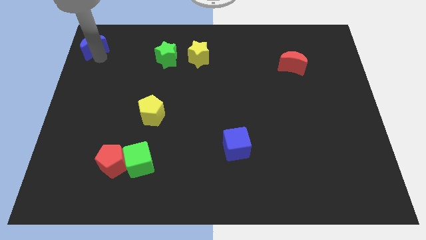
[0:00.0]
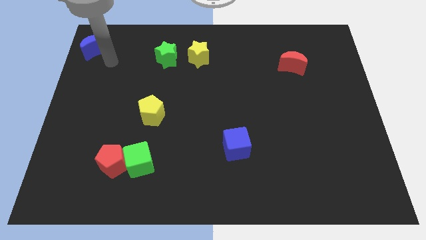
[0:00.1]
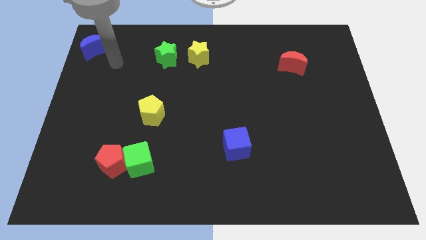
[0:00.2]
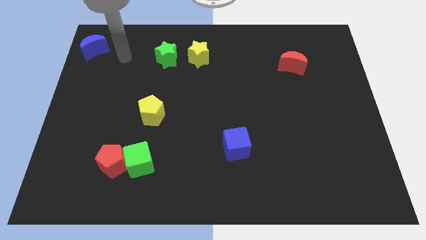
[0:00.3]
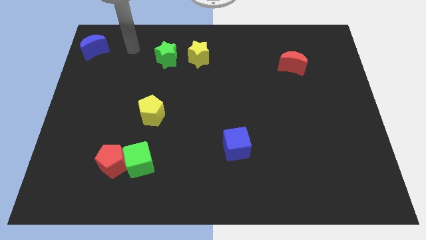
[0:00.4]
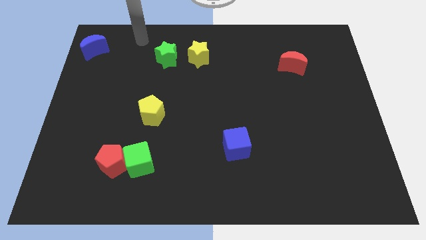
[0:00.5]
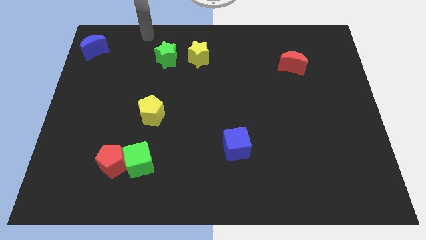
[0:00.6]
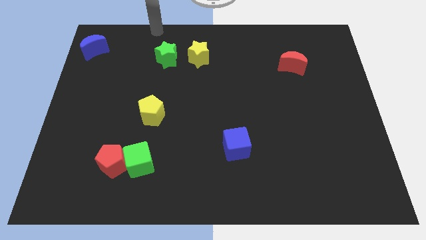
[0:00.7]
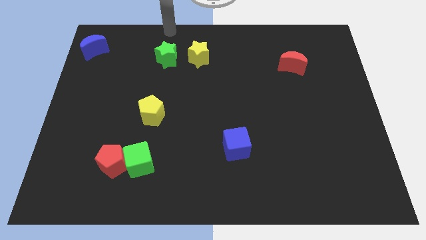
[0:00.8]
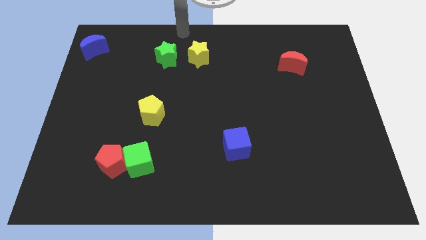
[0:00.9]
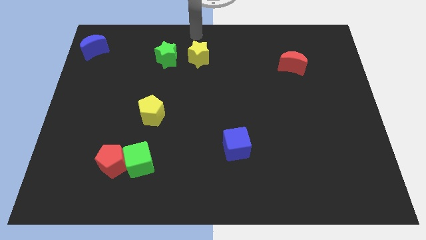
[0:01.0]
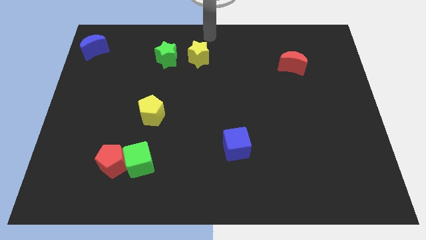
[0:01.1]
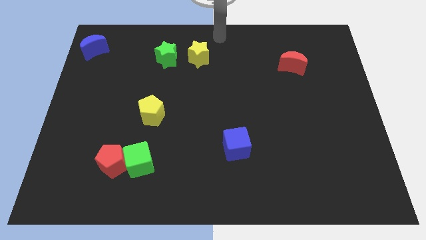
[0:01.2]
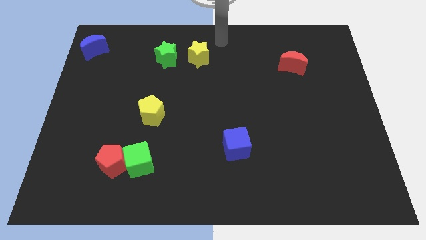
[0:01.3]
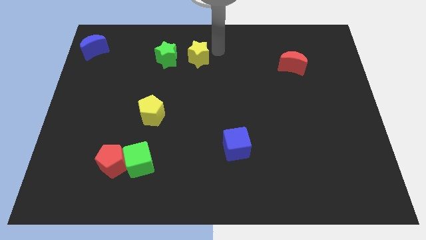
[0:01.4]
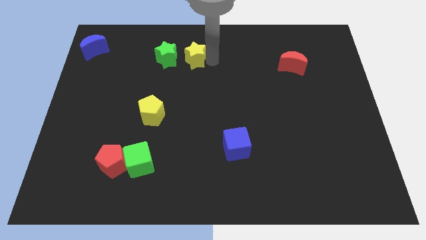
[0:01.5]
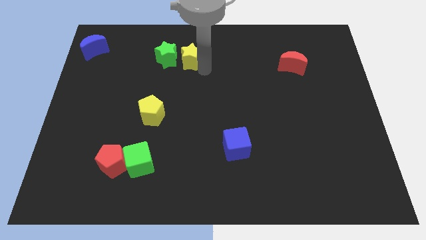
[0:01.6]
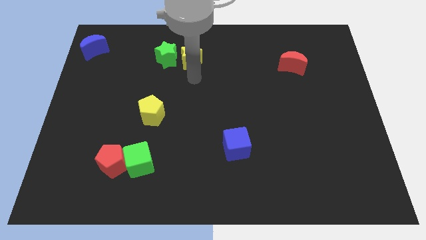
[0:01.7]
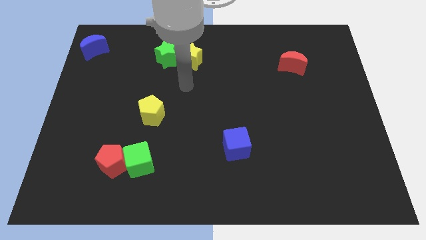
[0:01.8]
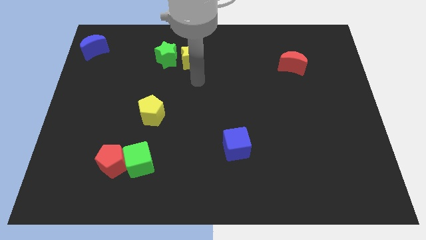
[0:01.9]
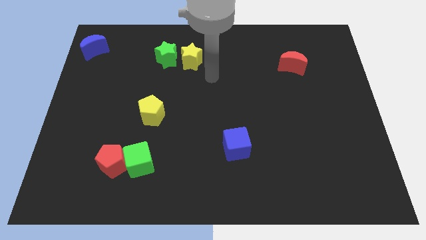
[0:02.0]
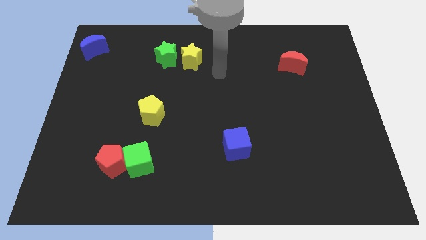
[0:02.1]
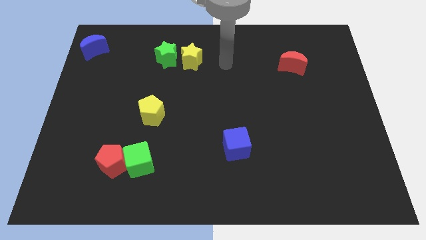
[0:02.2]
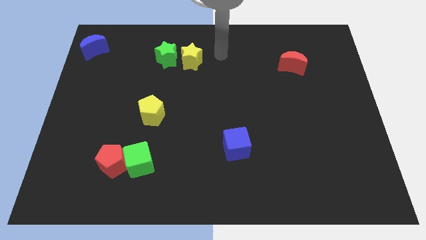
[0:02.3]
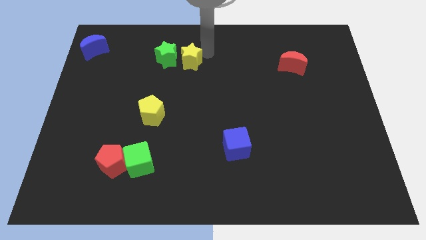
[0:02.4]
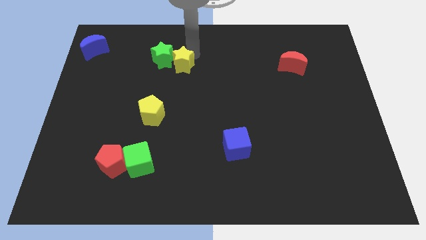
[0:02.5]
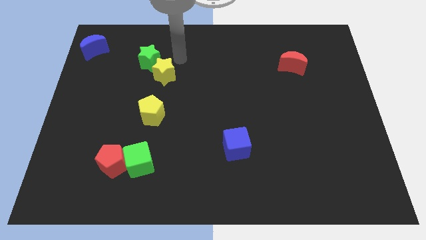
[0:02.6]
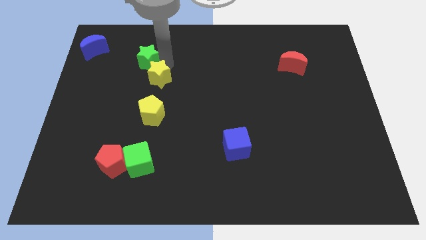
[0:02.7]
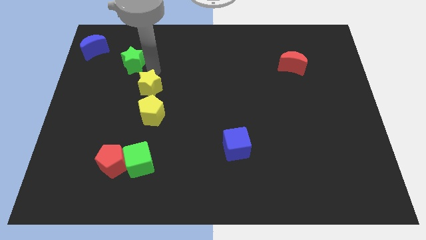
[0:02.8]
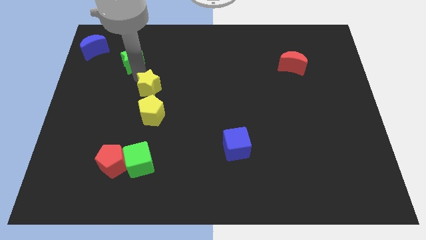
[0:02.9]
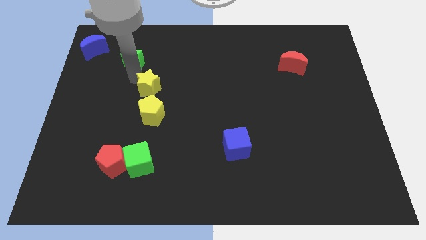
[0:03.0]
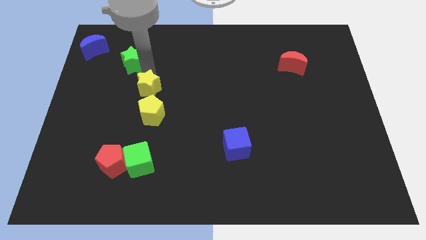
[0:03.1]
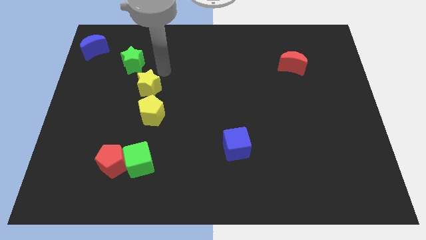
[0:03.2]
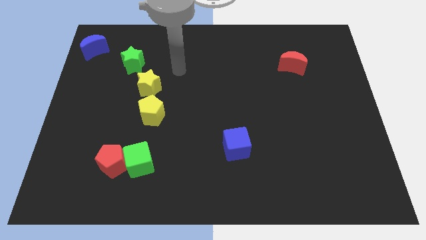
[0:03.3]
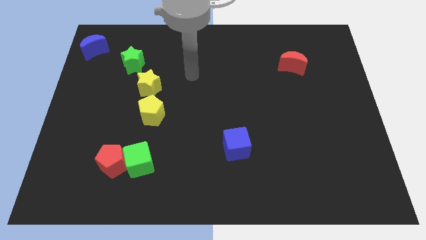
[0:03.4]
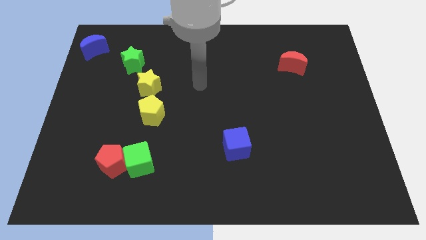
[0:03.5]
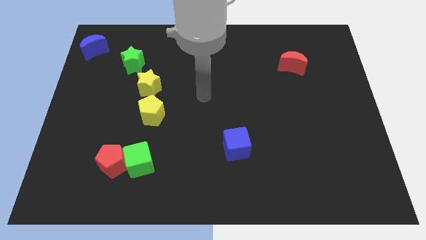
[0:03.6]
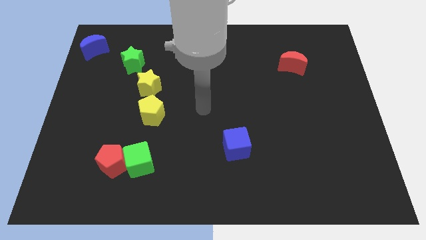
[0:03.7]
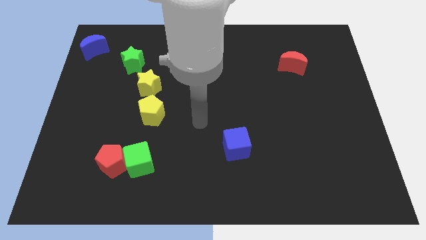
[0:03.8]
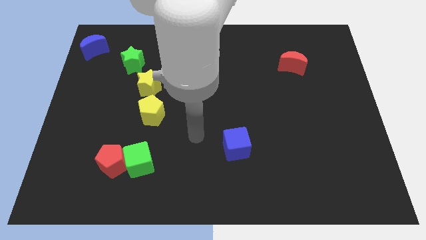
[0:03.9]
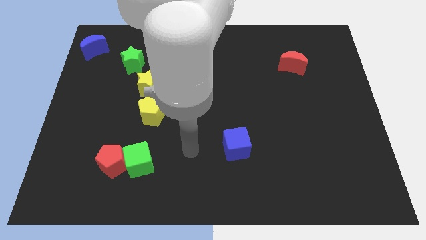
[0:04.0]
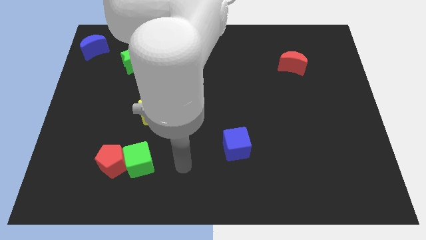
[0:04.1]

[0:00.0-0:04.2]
move the yellow star to the top left side of the yellow pentagon

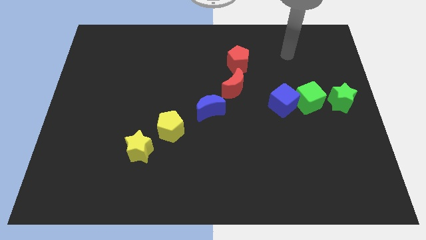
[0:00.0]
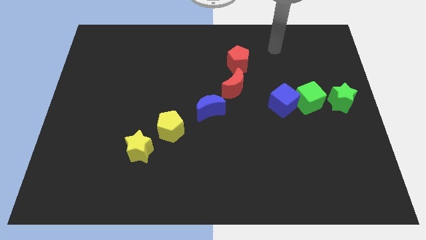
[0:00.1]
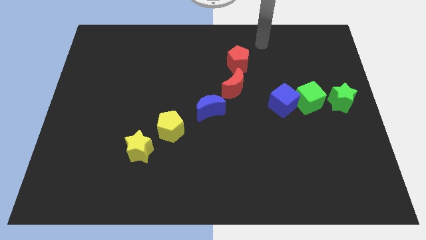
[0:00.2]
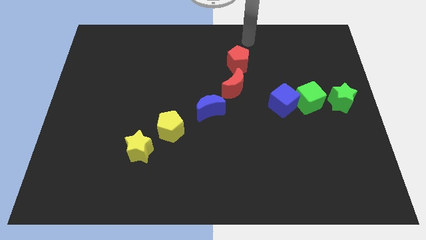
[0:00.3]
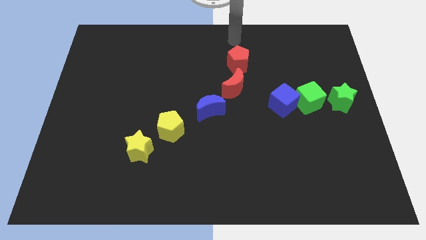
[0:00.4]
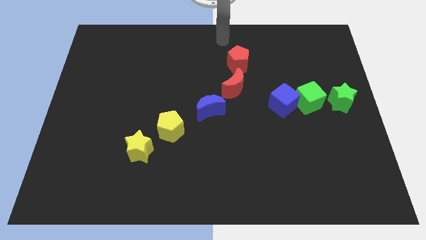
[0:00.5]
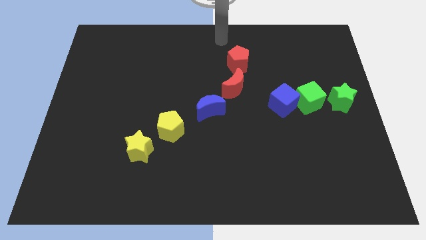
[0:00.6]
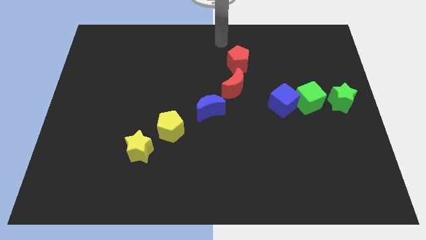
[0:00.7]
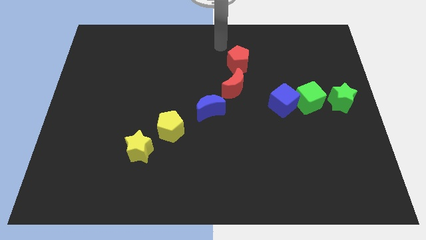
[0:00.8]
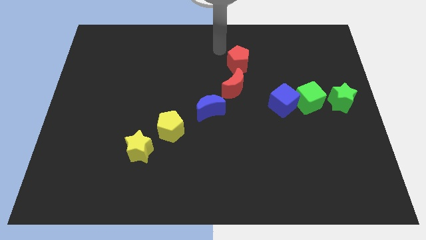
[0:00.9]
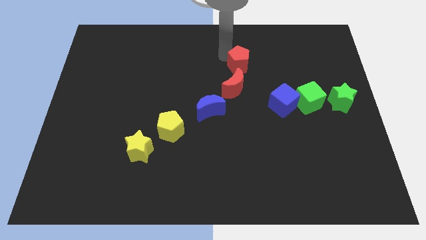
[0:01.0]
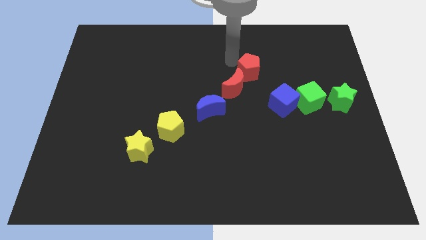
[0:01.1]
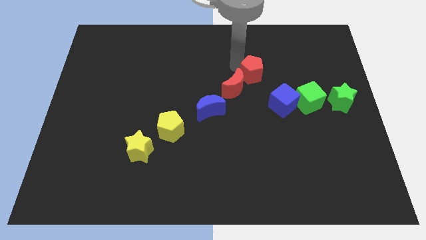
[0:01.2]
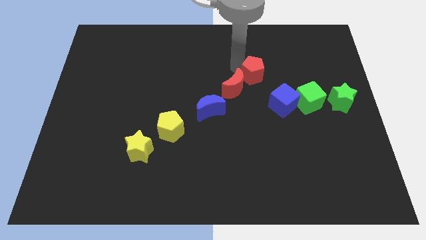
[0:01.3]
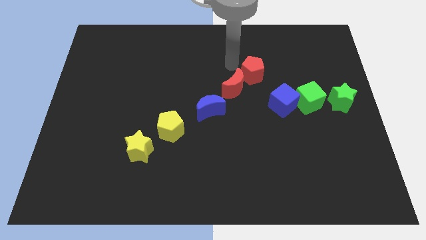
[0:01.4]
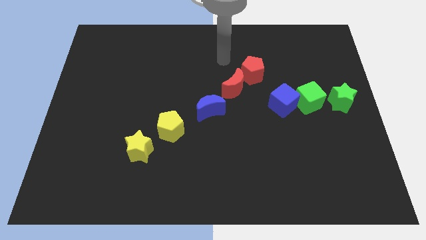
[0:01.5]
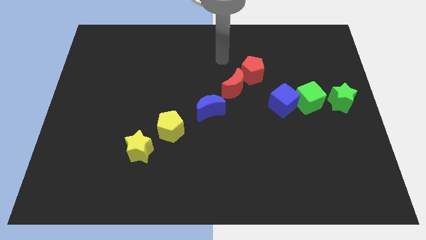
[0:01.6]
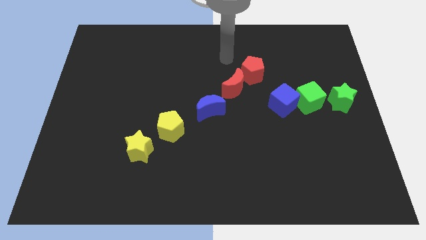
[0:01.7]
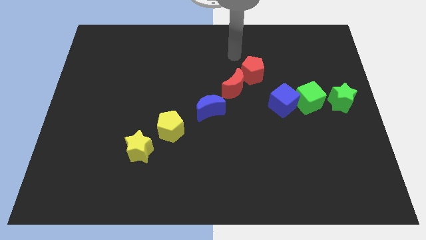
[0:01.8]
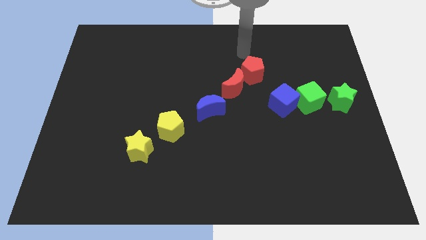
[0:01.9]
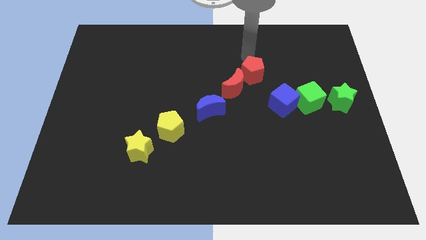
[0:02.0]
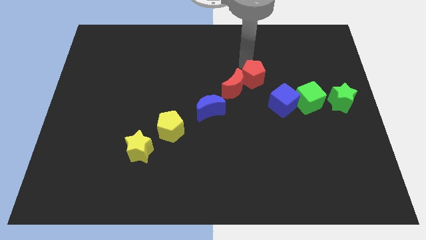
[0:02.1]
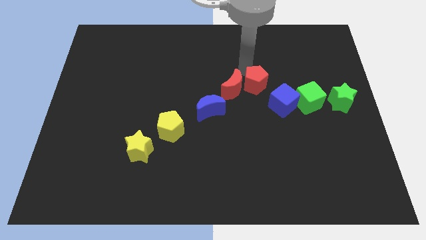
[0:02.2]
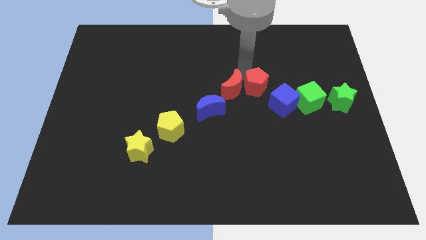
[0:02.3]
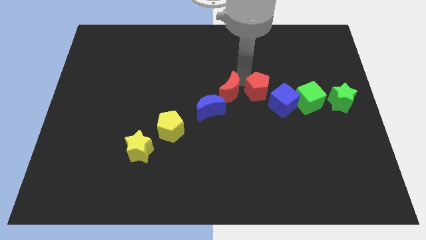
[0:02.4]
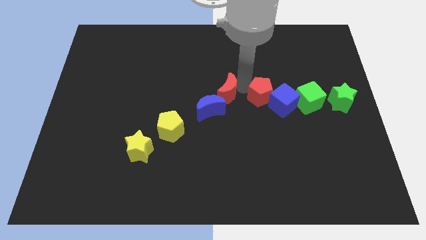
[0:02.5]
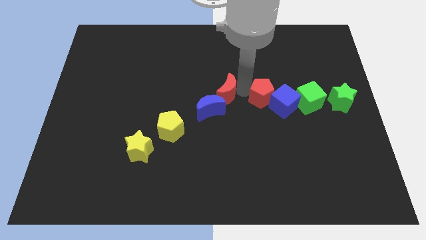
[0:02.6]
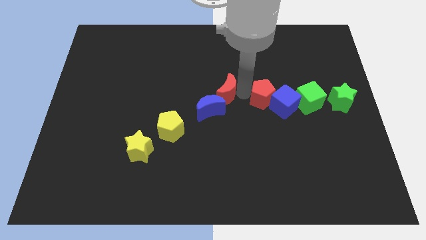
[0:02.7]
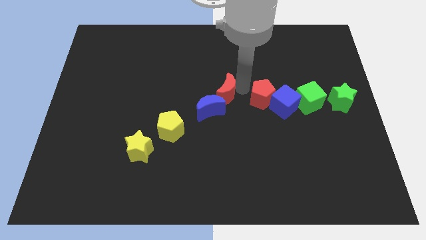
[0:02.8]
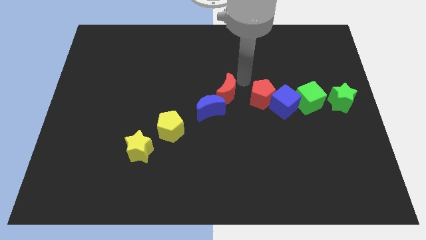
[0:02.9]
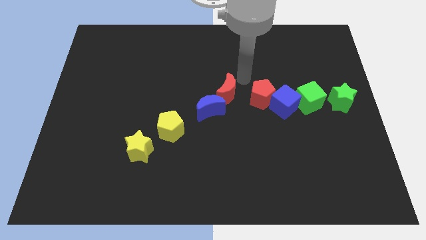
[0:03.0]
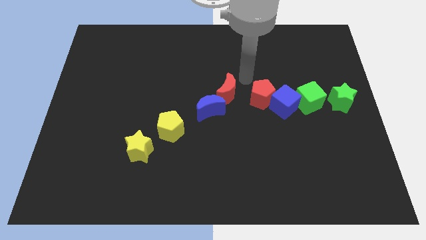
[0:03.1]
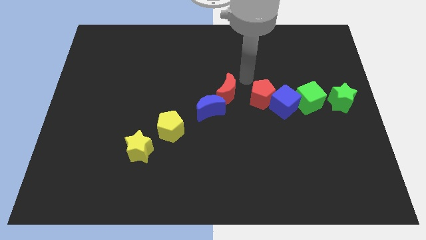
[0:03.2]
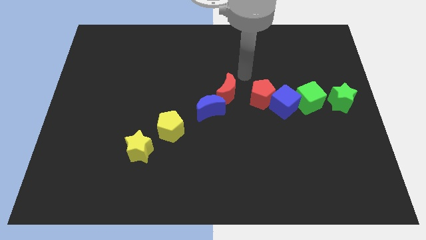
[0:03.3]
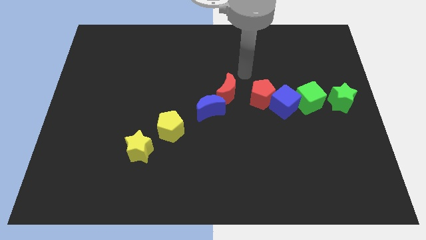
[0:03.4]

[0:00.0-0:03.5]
move red pentagon into the left of blue cube

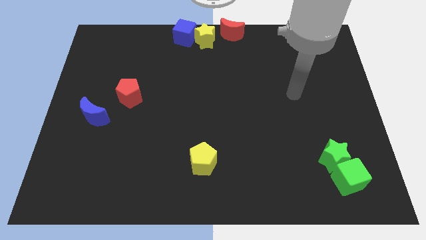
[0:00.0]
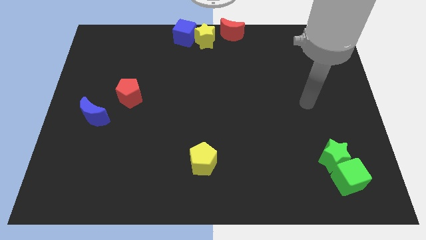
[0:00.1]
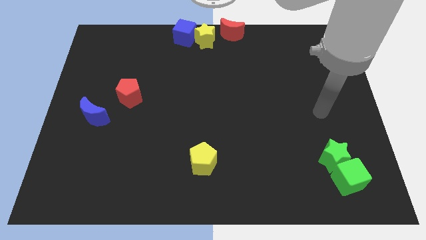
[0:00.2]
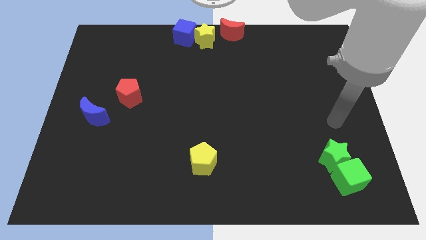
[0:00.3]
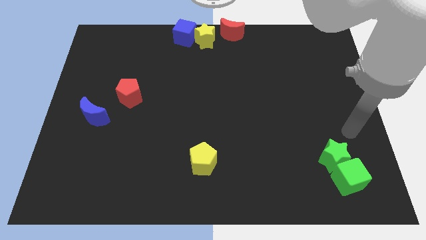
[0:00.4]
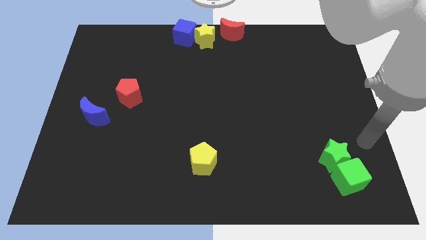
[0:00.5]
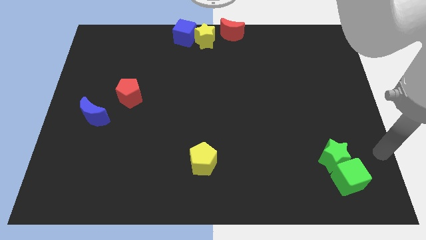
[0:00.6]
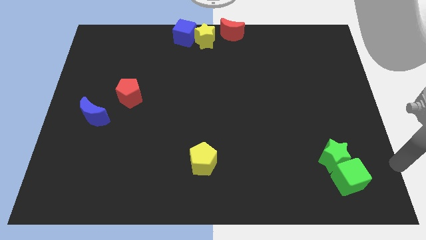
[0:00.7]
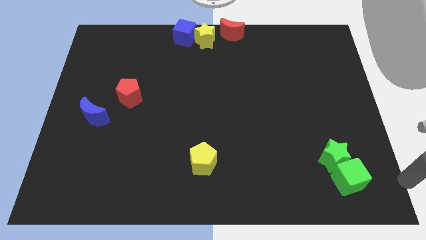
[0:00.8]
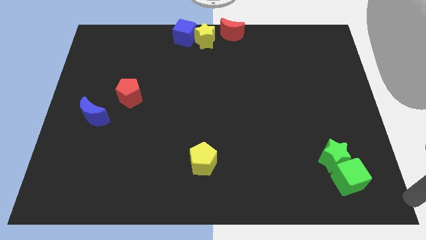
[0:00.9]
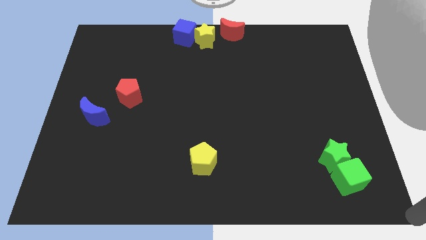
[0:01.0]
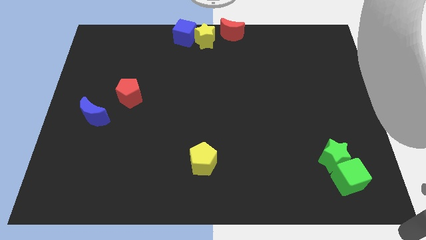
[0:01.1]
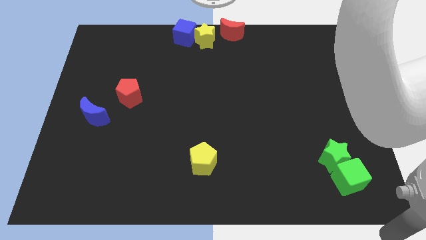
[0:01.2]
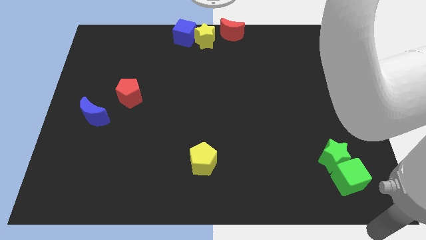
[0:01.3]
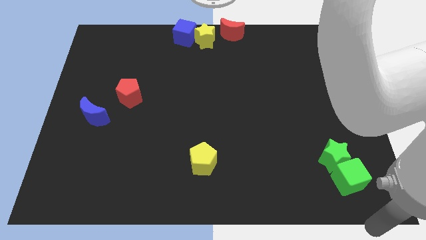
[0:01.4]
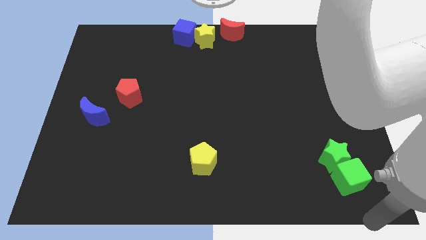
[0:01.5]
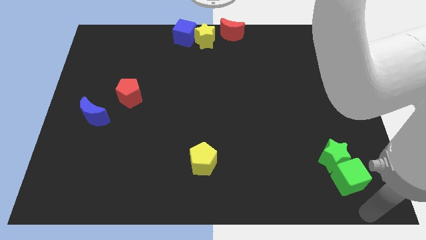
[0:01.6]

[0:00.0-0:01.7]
move your arm to the bottom of the green block
